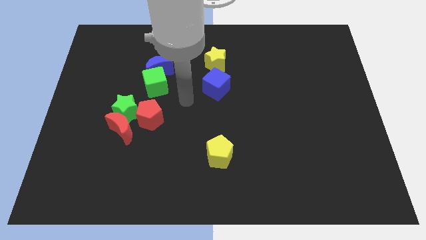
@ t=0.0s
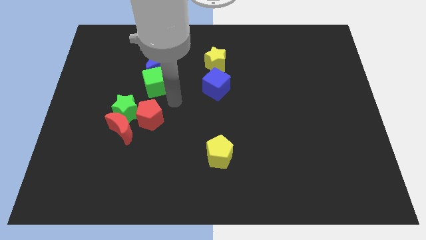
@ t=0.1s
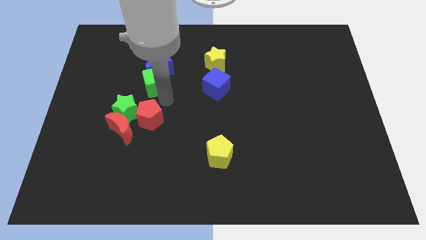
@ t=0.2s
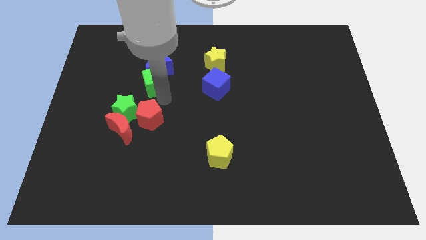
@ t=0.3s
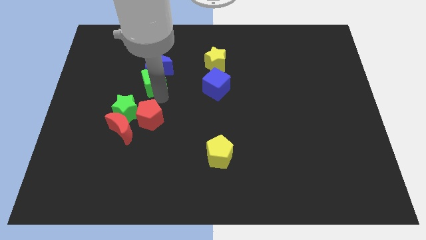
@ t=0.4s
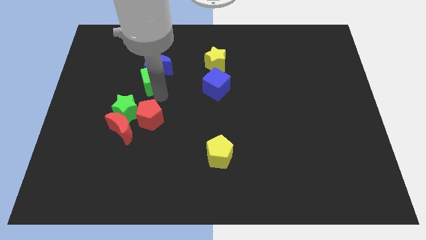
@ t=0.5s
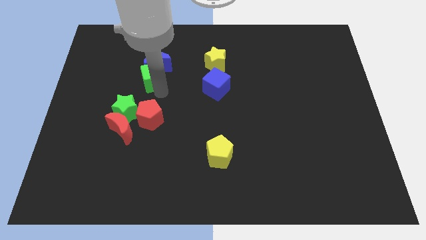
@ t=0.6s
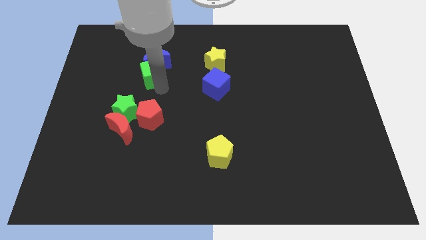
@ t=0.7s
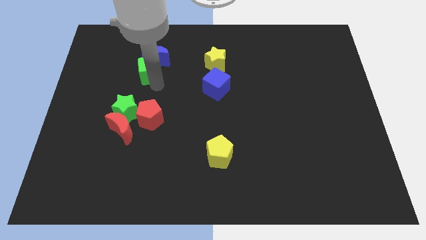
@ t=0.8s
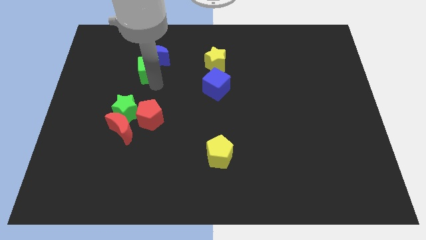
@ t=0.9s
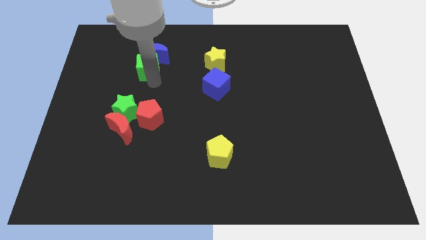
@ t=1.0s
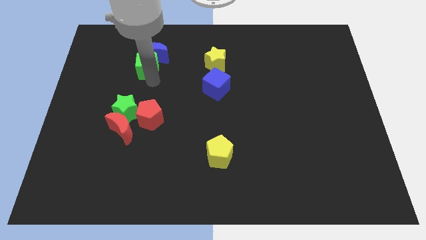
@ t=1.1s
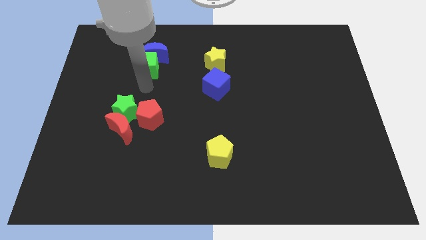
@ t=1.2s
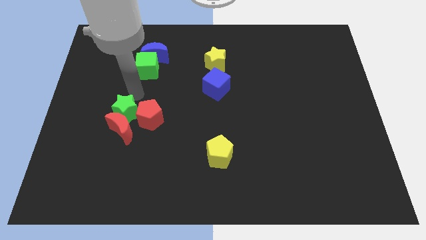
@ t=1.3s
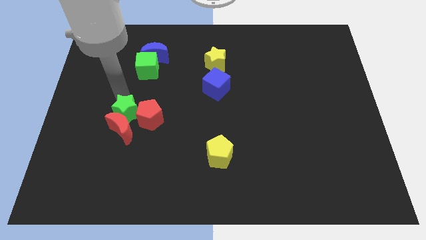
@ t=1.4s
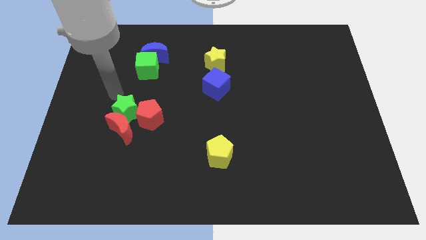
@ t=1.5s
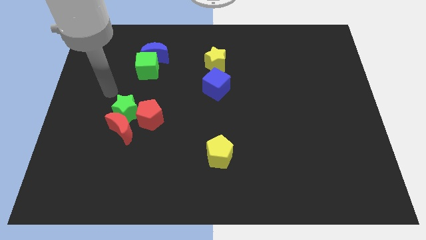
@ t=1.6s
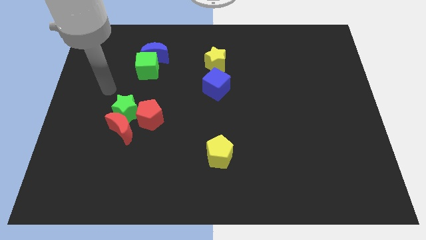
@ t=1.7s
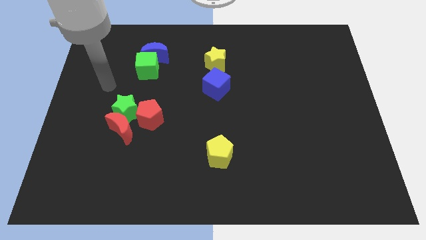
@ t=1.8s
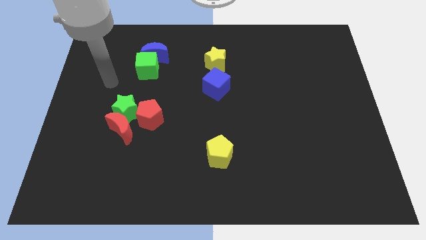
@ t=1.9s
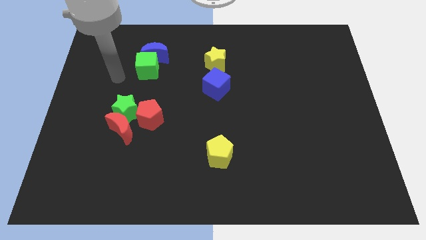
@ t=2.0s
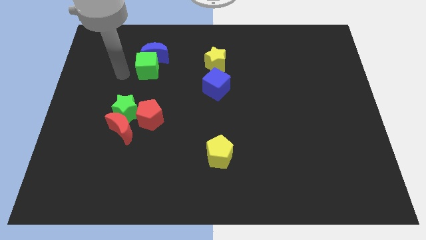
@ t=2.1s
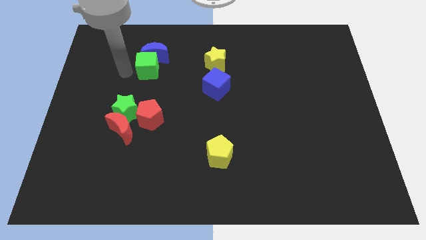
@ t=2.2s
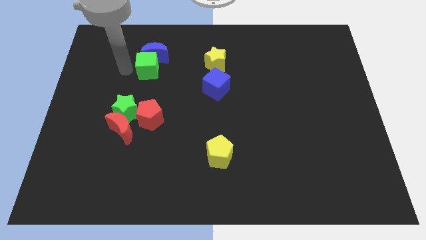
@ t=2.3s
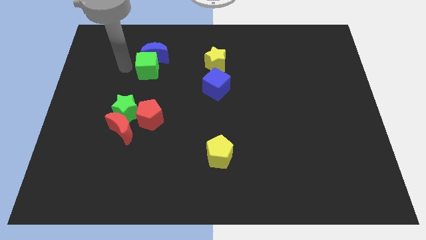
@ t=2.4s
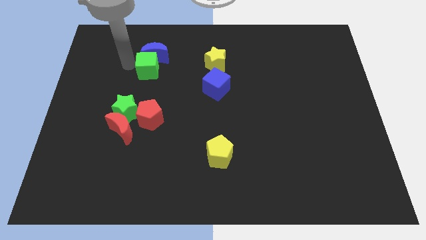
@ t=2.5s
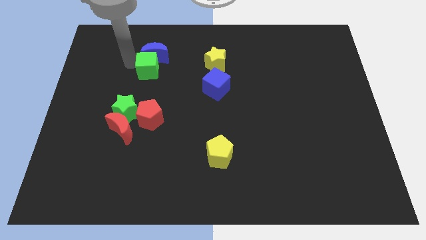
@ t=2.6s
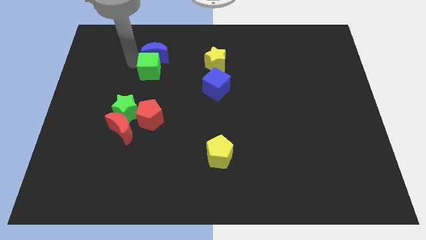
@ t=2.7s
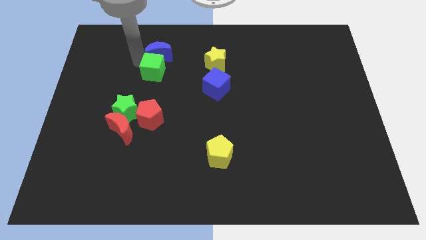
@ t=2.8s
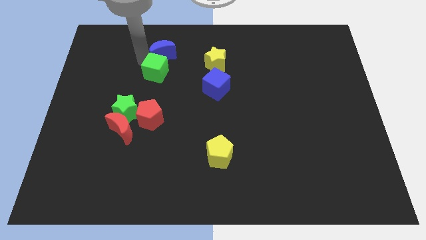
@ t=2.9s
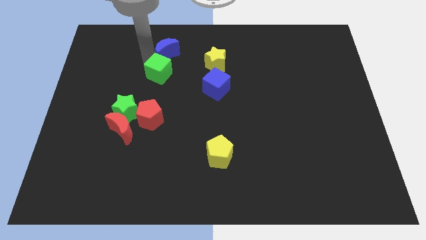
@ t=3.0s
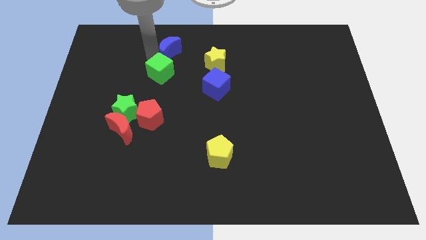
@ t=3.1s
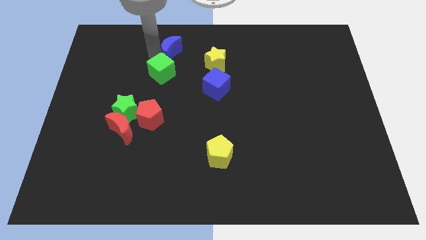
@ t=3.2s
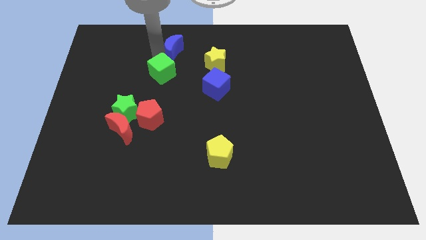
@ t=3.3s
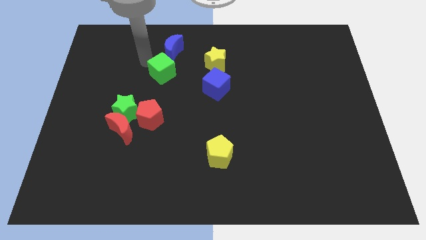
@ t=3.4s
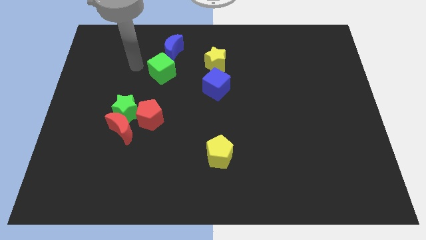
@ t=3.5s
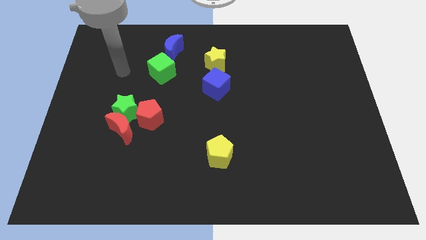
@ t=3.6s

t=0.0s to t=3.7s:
push green cube and blue crescent slightly towards the top of the board

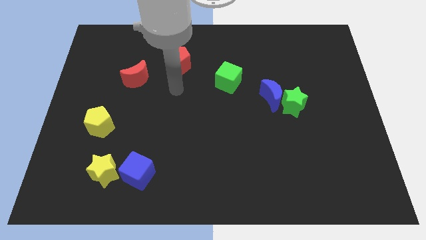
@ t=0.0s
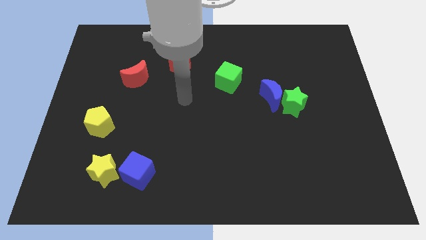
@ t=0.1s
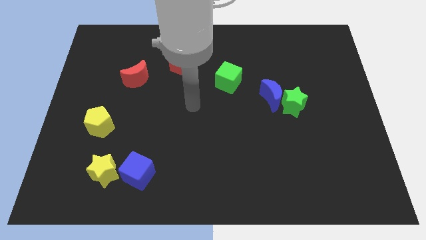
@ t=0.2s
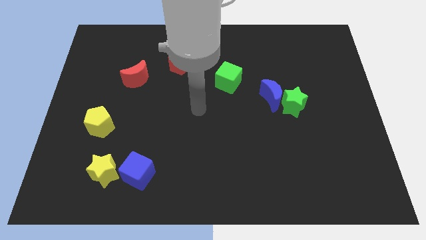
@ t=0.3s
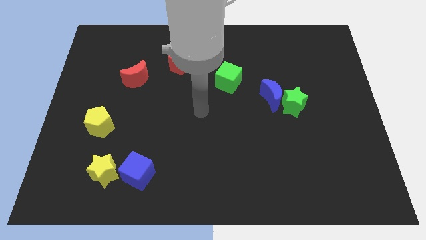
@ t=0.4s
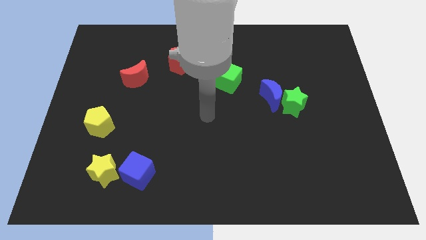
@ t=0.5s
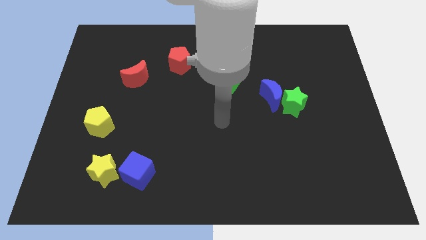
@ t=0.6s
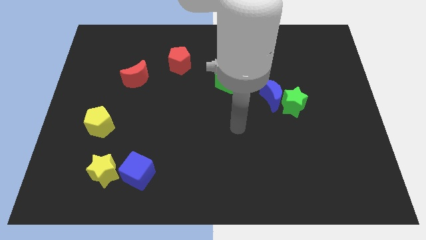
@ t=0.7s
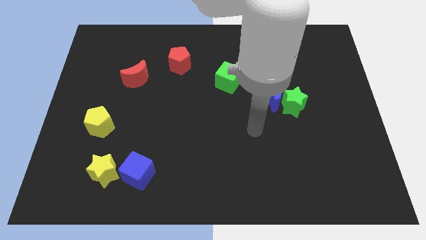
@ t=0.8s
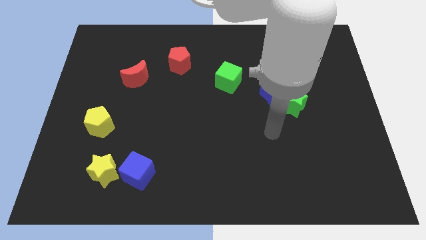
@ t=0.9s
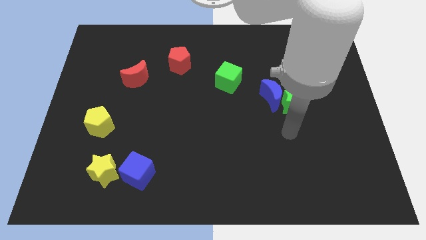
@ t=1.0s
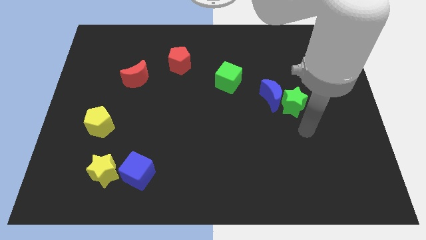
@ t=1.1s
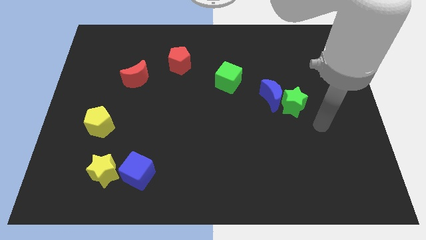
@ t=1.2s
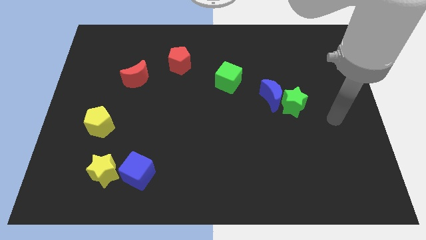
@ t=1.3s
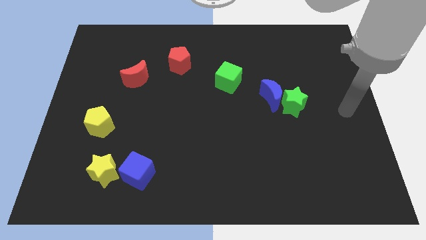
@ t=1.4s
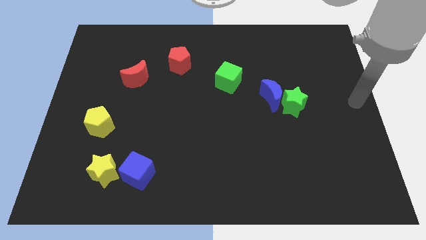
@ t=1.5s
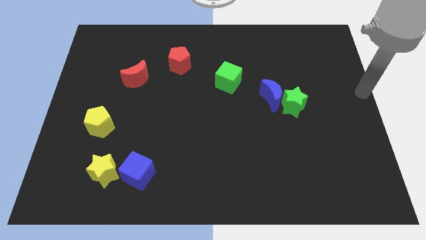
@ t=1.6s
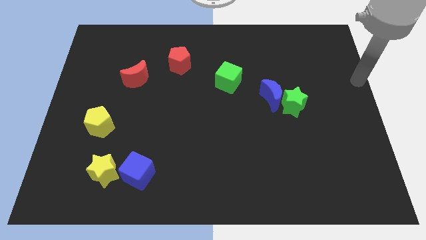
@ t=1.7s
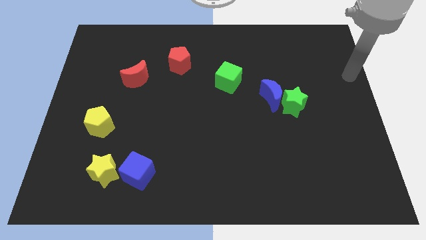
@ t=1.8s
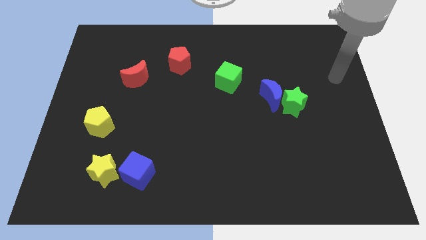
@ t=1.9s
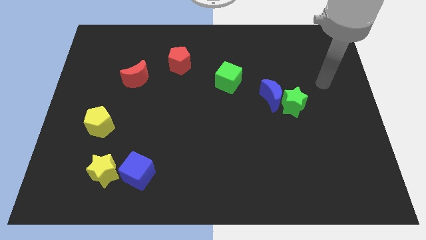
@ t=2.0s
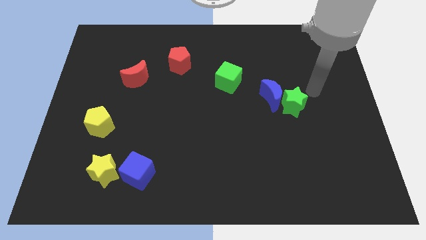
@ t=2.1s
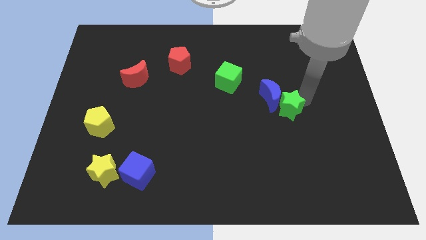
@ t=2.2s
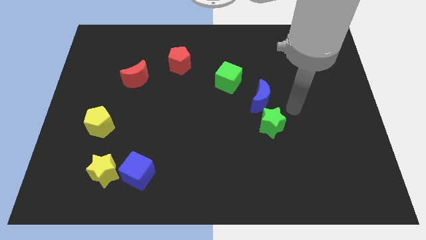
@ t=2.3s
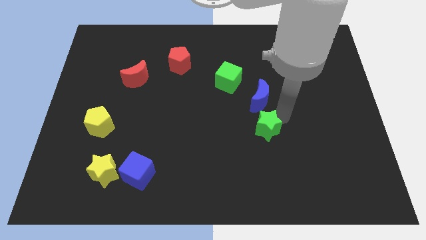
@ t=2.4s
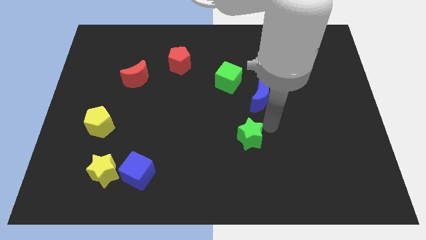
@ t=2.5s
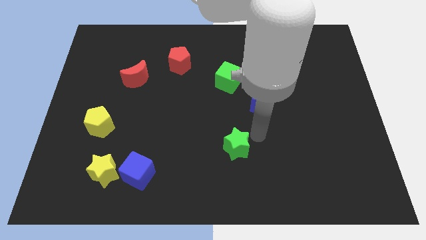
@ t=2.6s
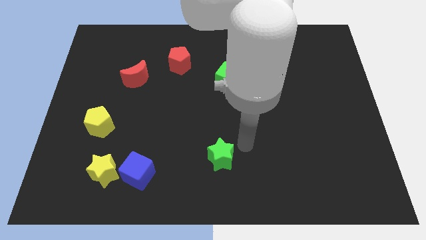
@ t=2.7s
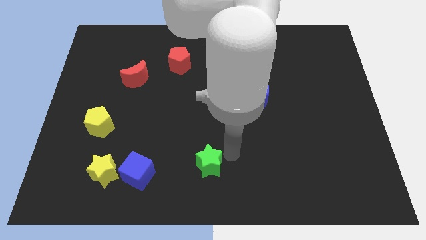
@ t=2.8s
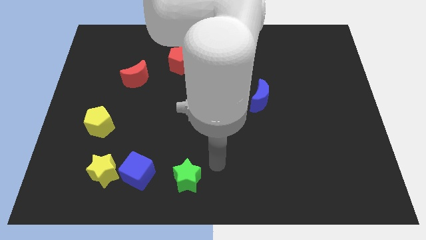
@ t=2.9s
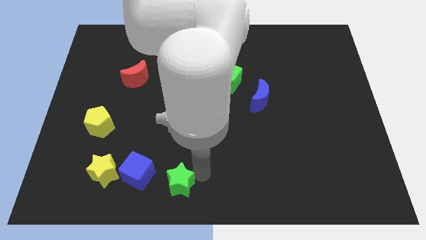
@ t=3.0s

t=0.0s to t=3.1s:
move the green star to right of blue cube

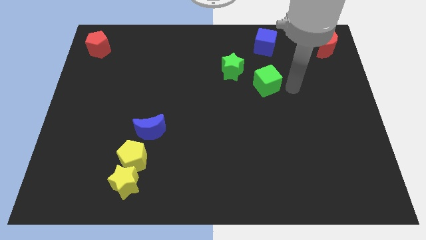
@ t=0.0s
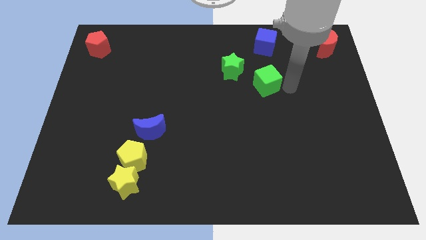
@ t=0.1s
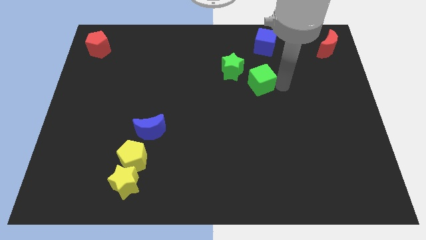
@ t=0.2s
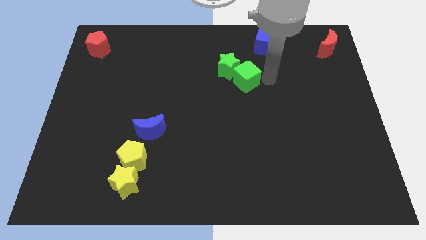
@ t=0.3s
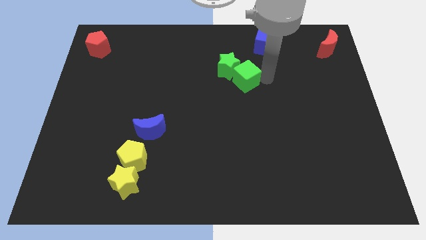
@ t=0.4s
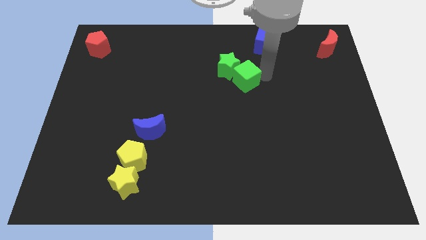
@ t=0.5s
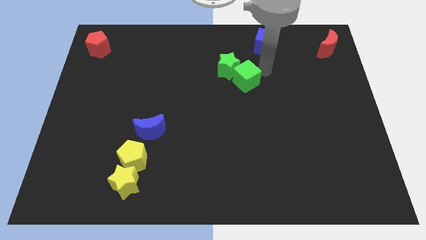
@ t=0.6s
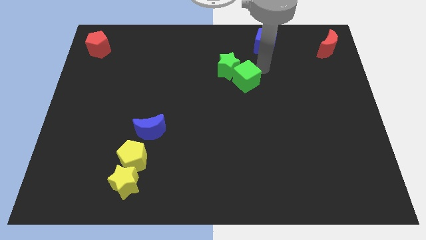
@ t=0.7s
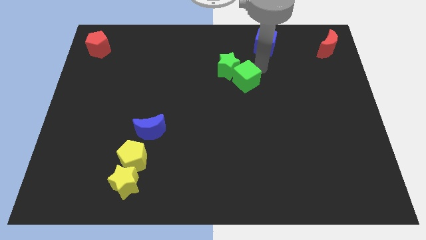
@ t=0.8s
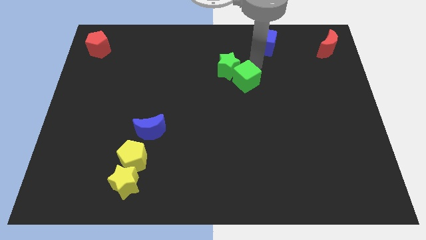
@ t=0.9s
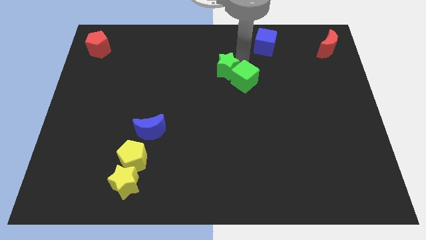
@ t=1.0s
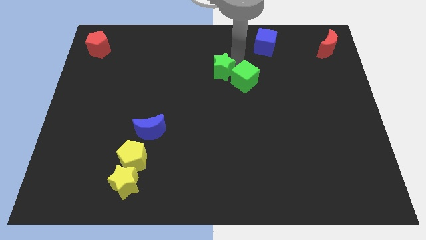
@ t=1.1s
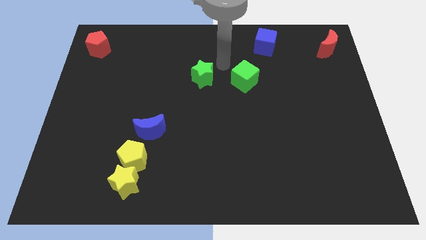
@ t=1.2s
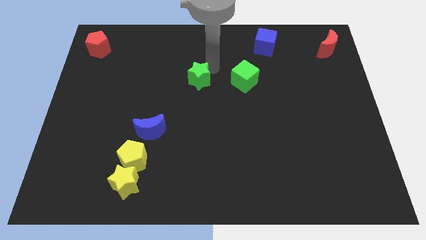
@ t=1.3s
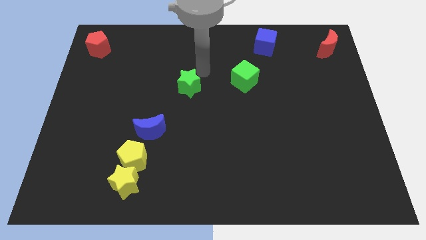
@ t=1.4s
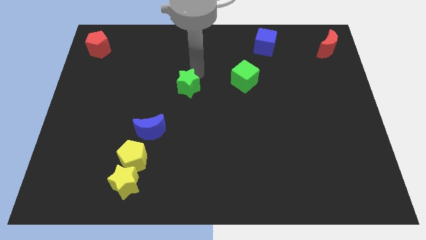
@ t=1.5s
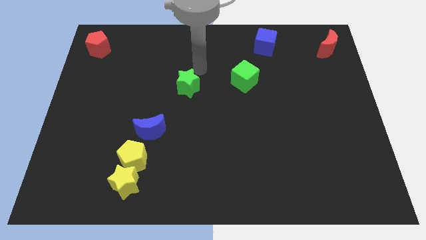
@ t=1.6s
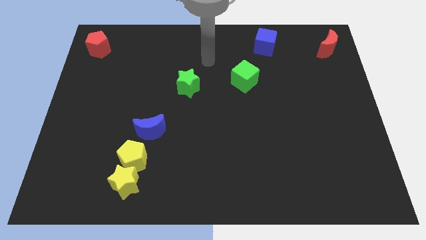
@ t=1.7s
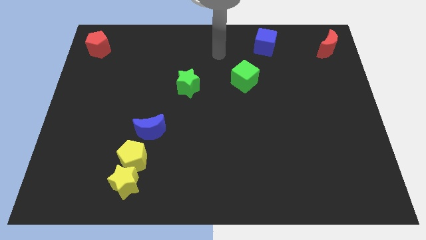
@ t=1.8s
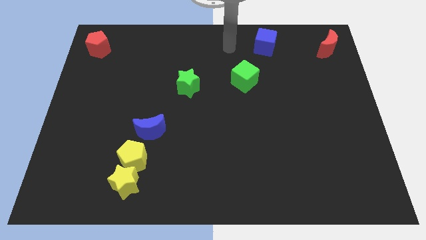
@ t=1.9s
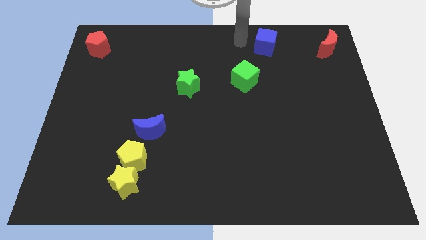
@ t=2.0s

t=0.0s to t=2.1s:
separate the green star from the green cube
